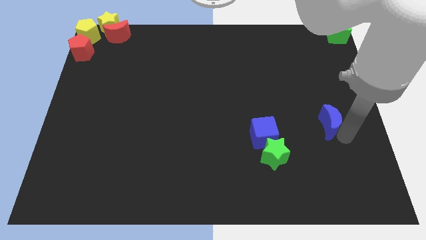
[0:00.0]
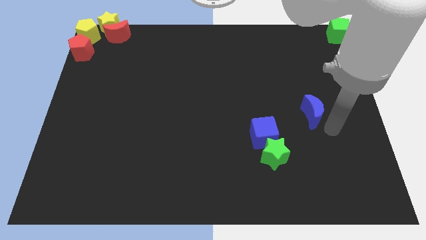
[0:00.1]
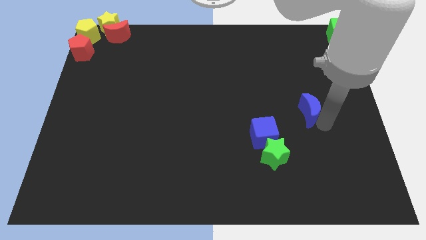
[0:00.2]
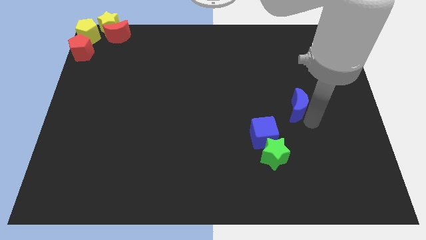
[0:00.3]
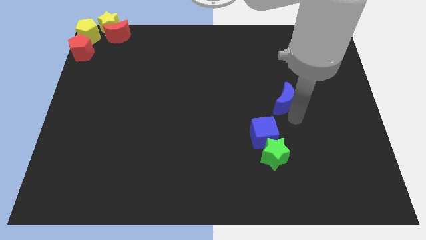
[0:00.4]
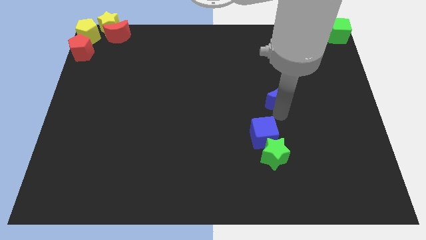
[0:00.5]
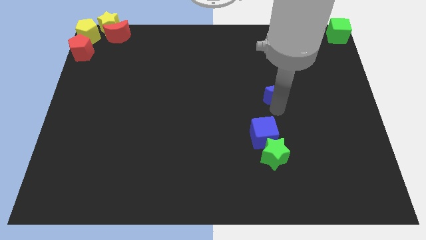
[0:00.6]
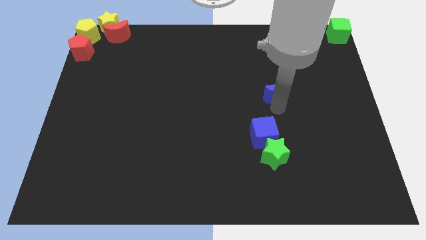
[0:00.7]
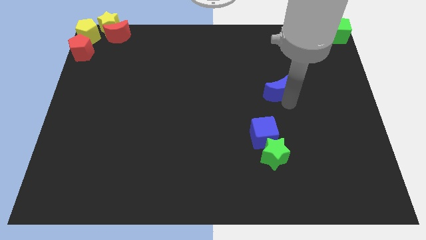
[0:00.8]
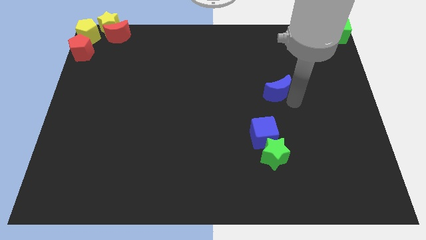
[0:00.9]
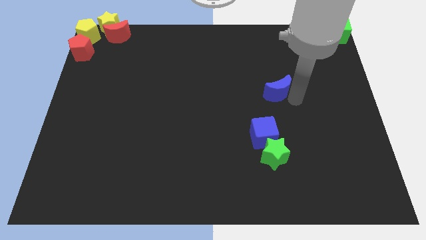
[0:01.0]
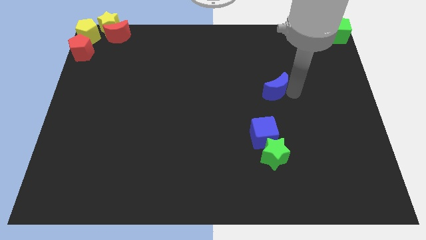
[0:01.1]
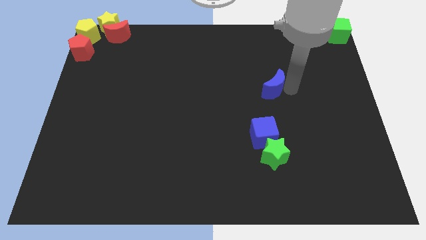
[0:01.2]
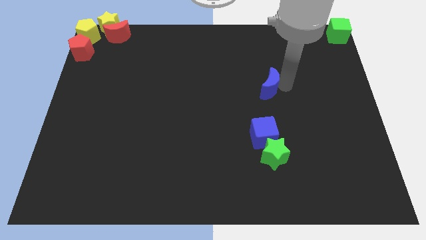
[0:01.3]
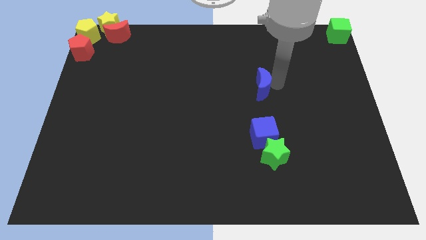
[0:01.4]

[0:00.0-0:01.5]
put the blue moon at the top side of the blue cube

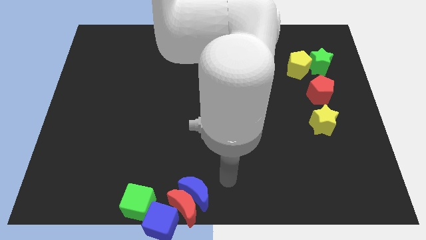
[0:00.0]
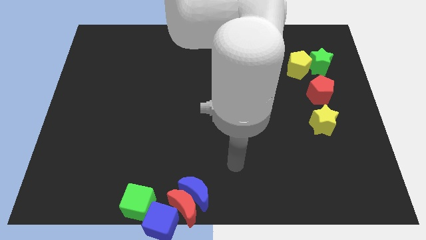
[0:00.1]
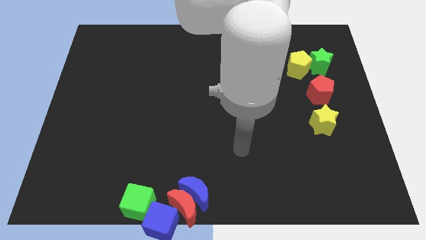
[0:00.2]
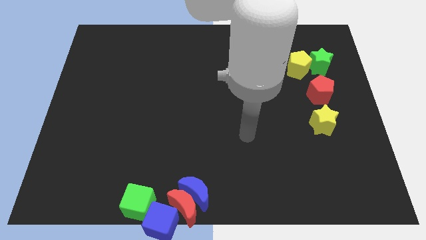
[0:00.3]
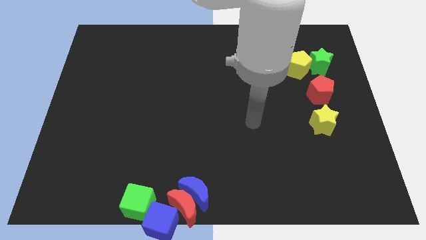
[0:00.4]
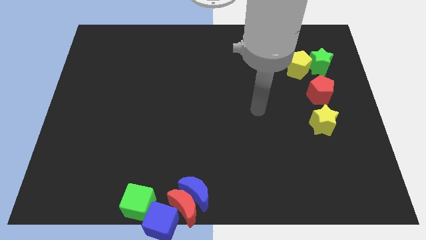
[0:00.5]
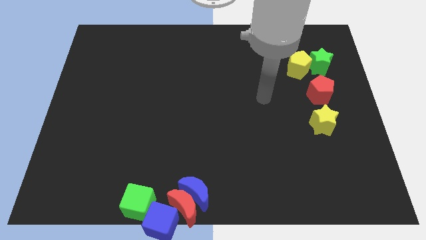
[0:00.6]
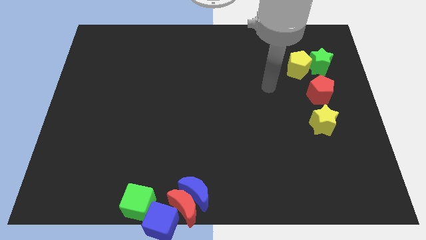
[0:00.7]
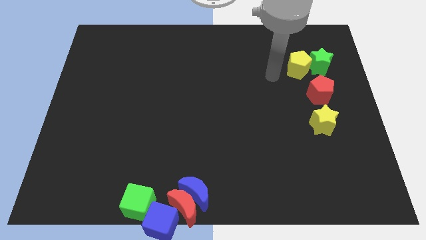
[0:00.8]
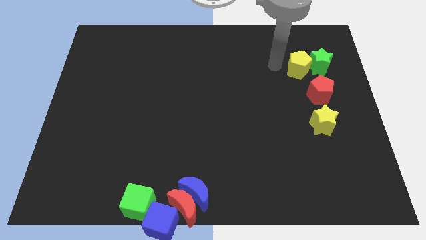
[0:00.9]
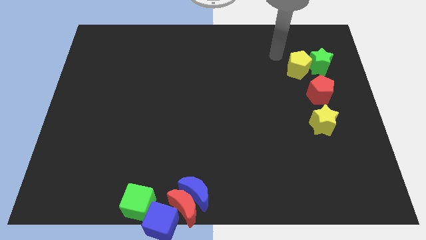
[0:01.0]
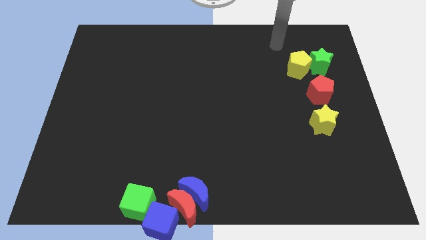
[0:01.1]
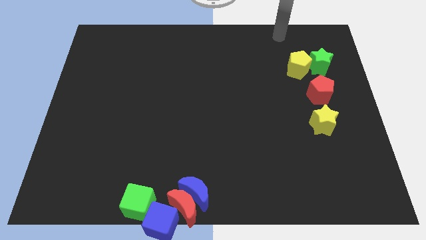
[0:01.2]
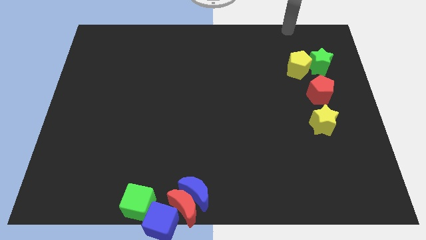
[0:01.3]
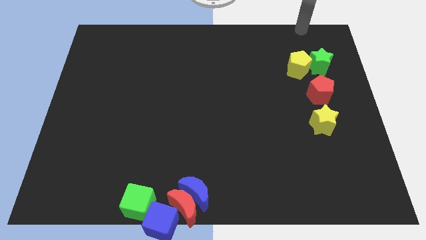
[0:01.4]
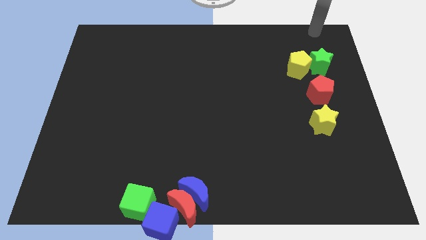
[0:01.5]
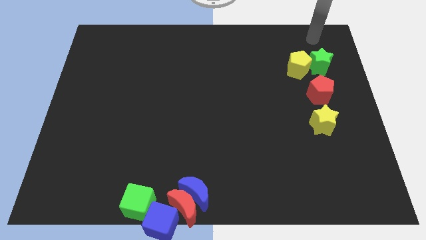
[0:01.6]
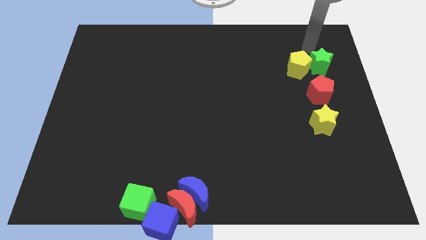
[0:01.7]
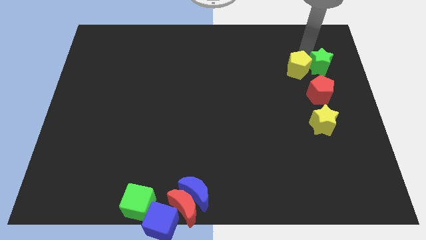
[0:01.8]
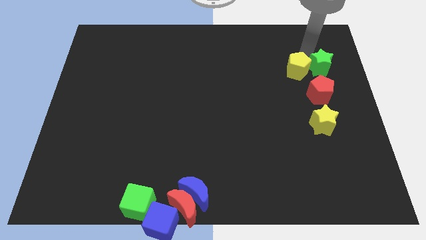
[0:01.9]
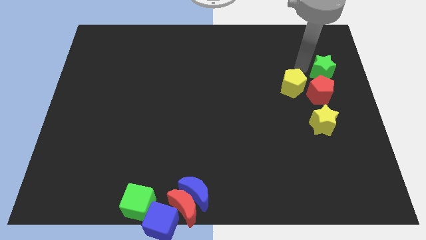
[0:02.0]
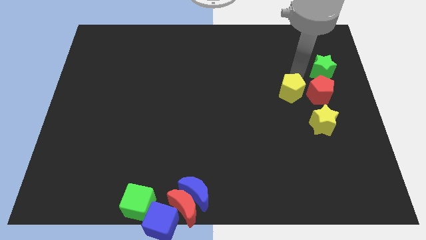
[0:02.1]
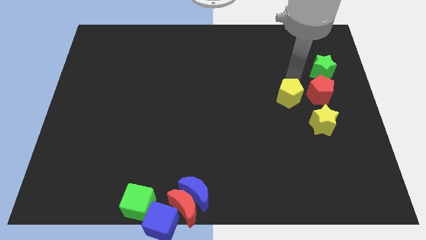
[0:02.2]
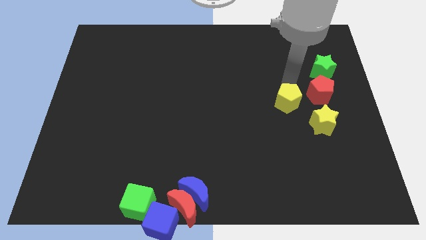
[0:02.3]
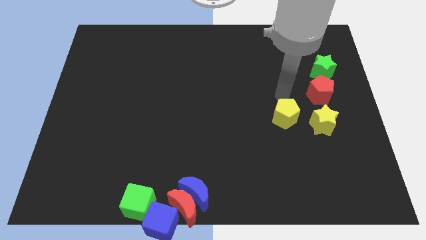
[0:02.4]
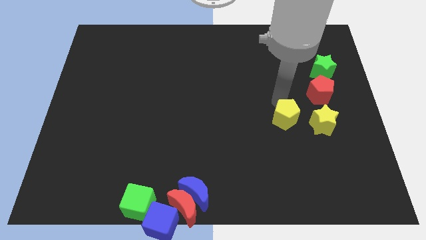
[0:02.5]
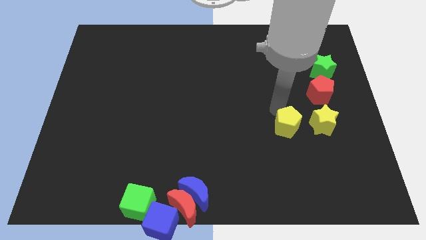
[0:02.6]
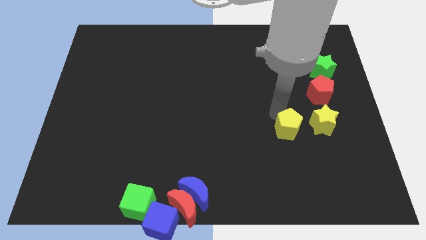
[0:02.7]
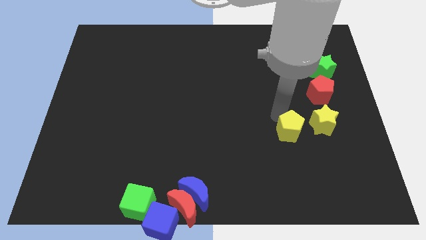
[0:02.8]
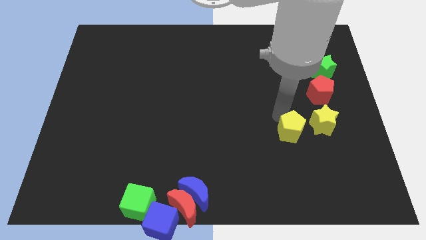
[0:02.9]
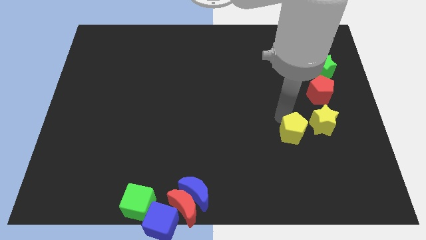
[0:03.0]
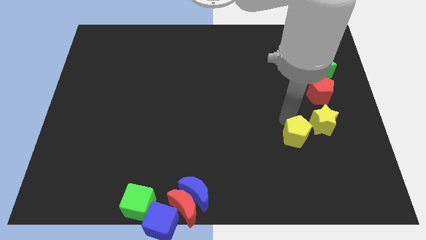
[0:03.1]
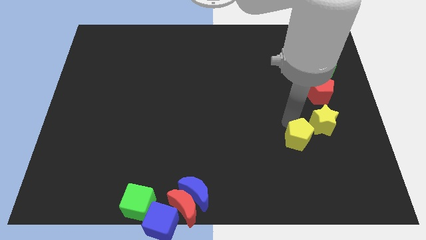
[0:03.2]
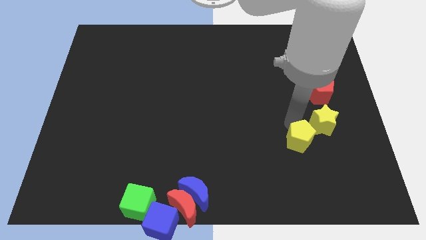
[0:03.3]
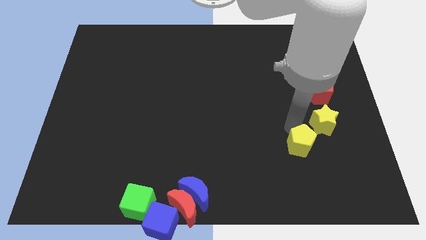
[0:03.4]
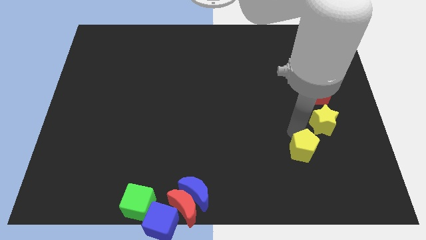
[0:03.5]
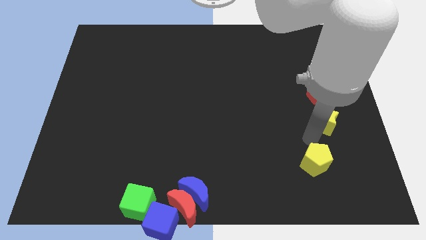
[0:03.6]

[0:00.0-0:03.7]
move the yellow pentagon diagonally below the bottom left side of the yellow star

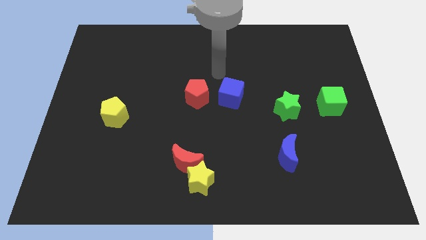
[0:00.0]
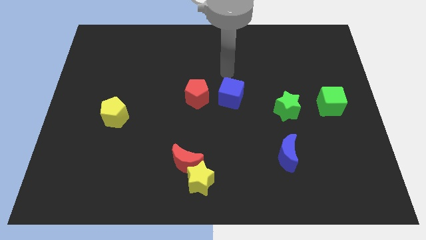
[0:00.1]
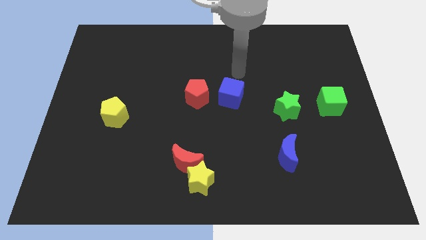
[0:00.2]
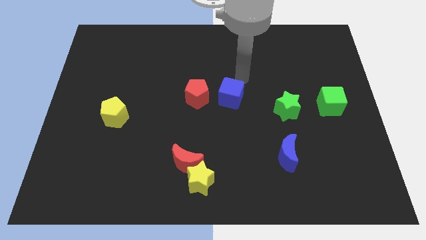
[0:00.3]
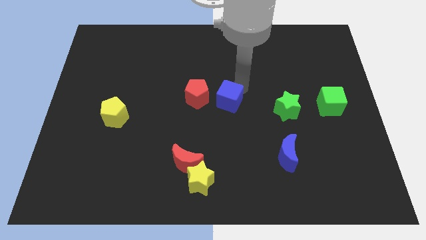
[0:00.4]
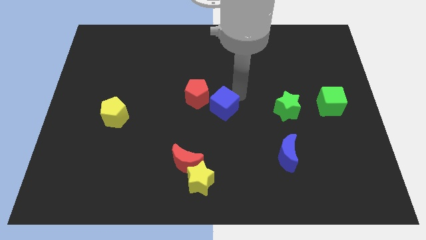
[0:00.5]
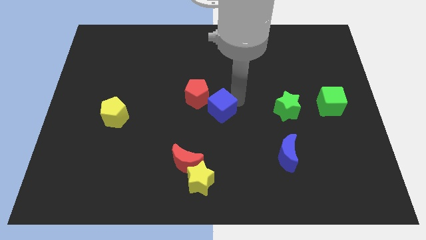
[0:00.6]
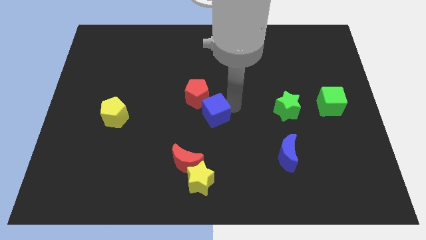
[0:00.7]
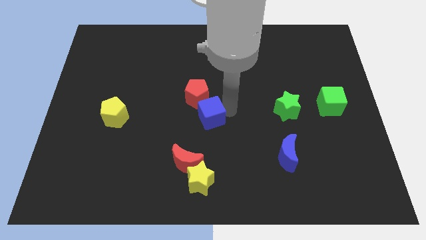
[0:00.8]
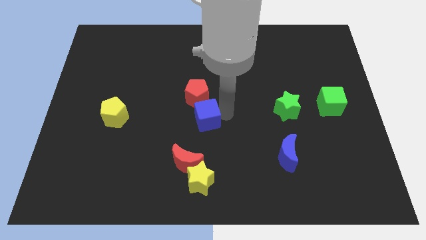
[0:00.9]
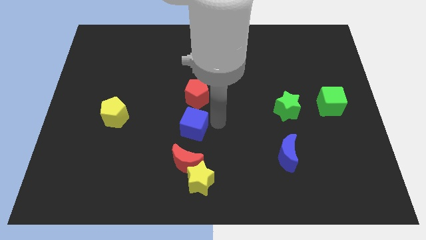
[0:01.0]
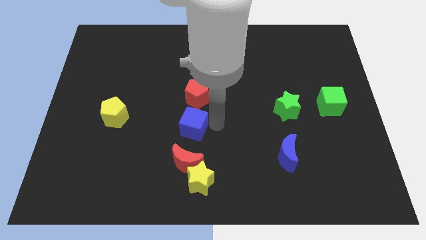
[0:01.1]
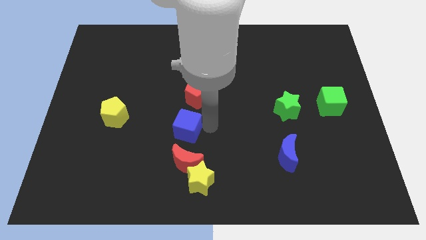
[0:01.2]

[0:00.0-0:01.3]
place the blue cube in between the red pentagon and red moon

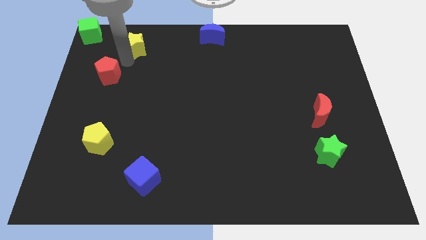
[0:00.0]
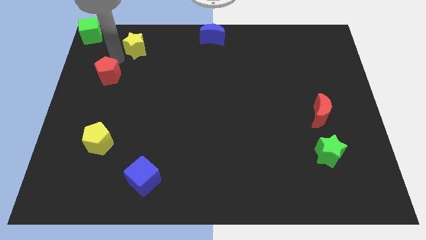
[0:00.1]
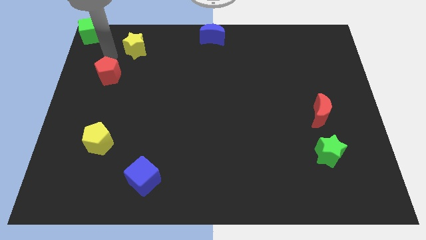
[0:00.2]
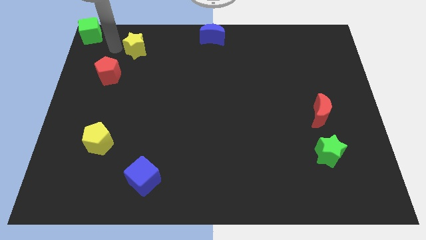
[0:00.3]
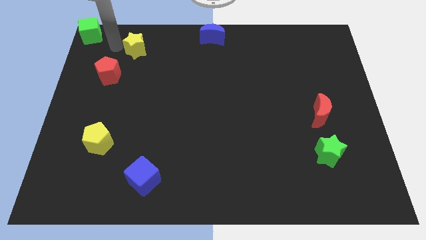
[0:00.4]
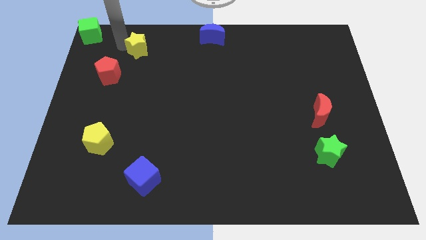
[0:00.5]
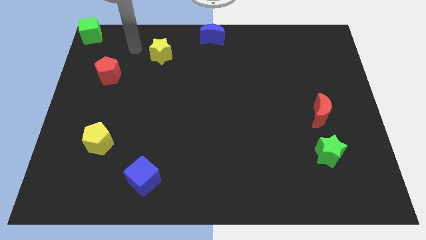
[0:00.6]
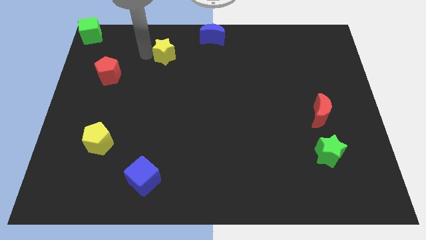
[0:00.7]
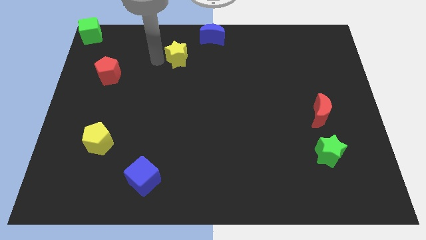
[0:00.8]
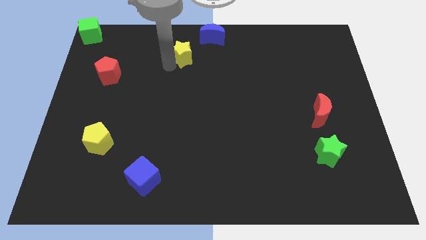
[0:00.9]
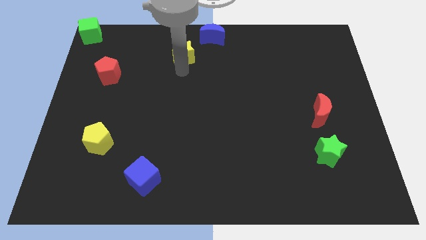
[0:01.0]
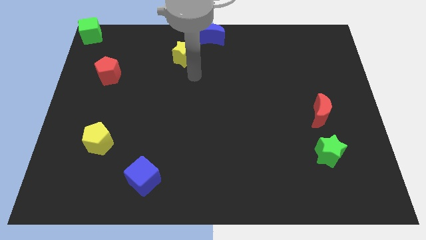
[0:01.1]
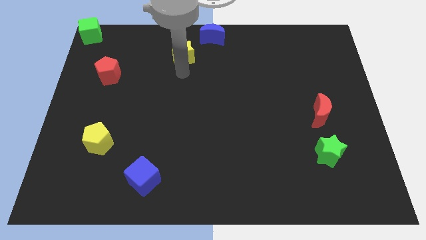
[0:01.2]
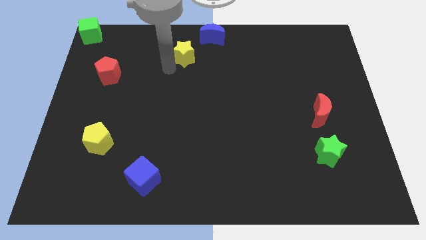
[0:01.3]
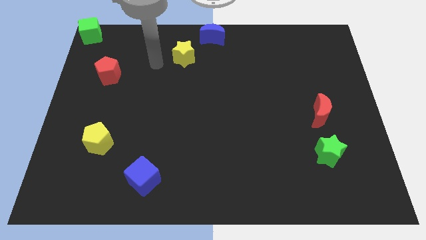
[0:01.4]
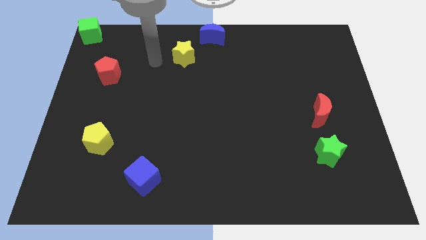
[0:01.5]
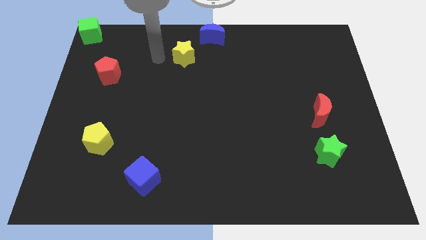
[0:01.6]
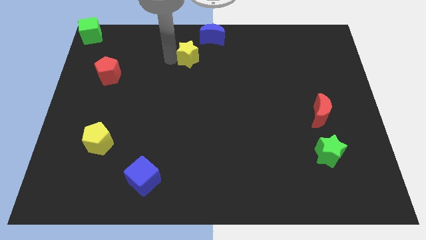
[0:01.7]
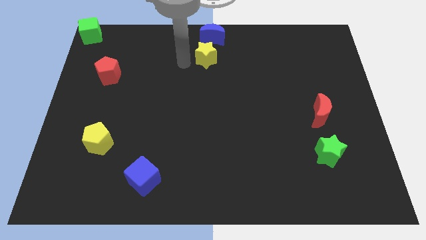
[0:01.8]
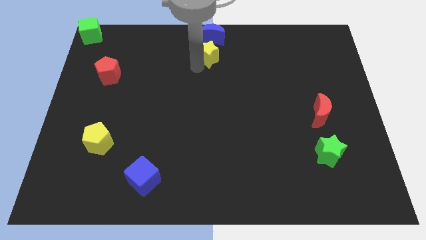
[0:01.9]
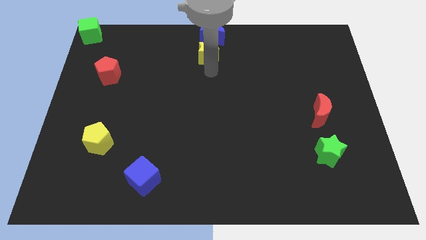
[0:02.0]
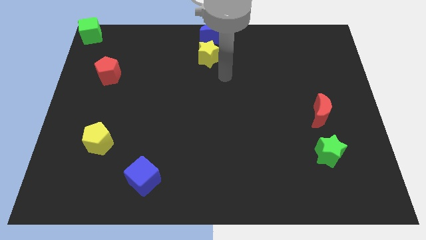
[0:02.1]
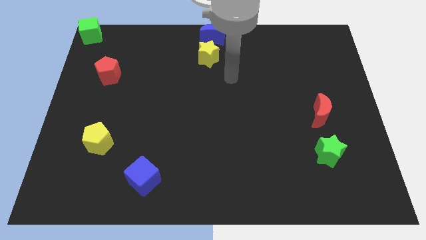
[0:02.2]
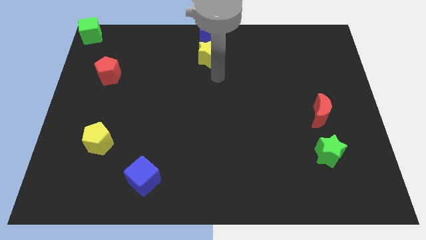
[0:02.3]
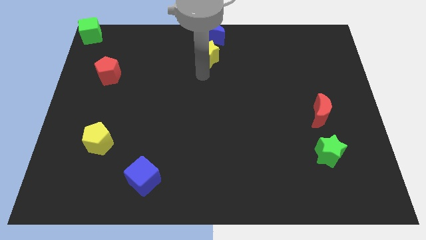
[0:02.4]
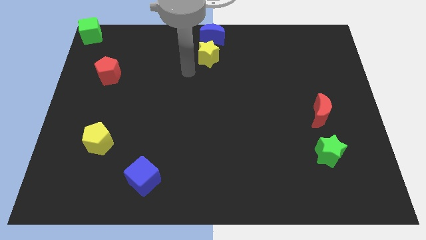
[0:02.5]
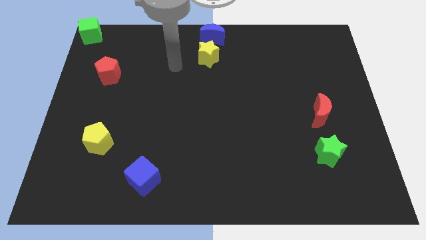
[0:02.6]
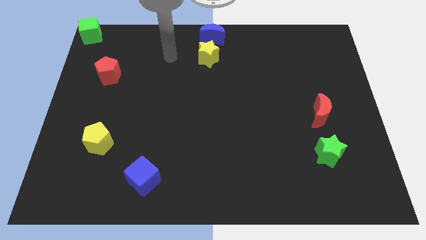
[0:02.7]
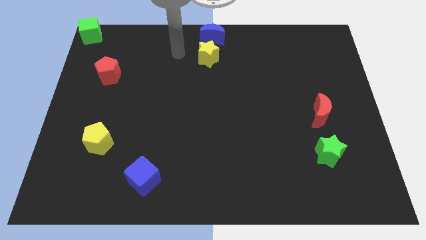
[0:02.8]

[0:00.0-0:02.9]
put yellow star below blue moon
